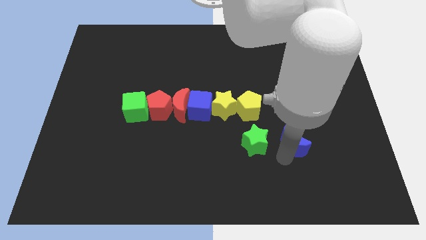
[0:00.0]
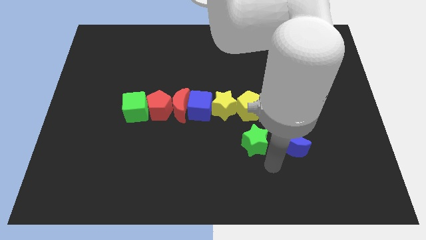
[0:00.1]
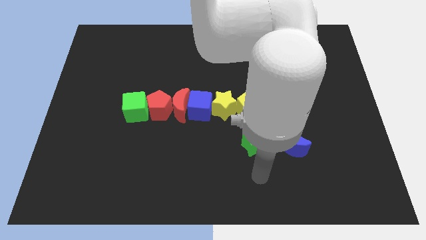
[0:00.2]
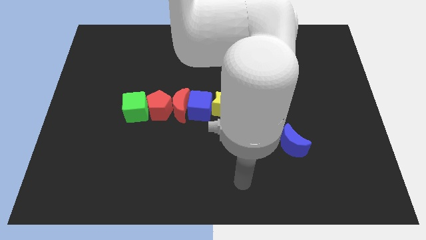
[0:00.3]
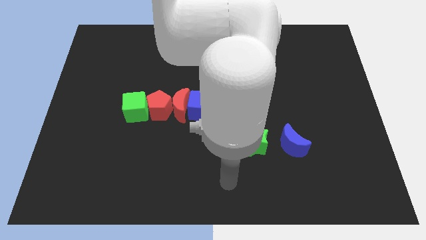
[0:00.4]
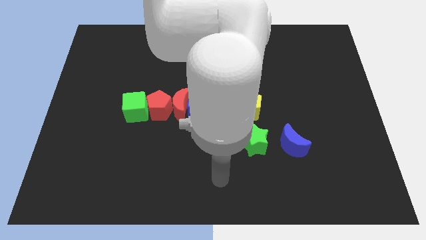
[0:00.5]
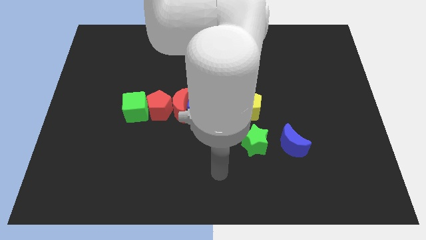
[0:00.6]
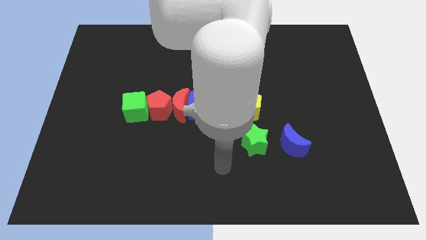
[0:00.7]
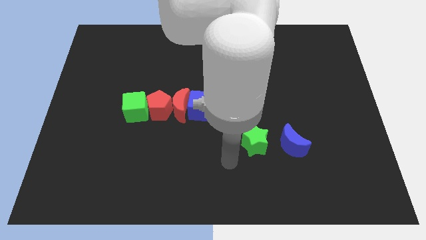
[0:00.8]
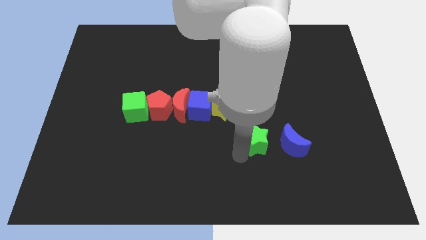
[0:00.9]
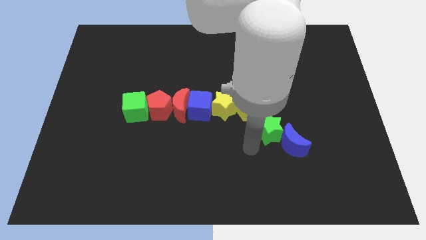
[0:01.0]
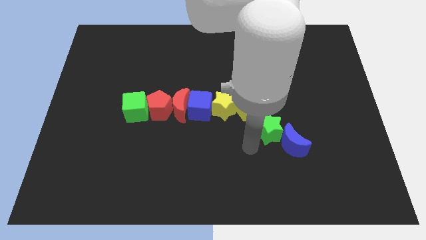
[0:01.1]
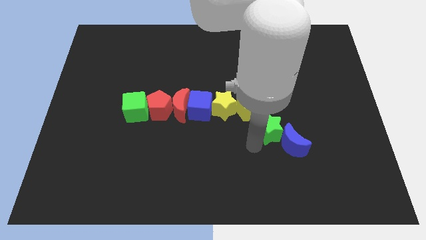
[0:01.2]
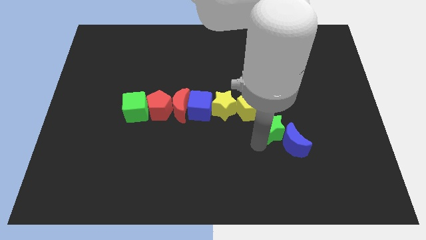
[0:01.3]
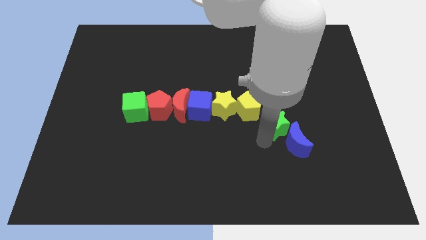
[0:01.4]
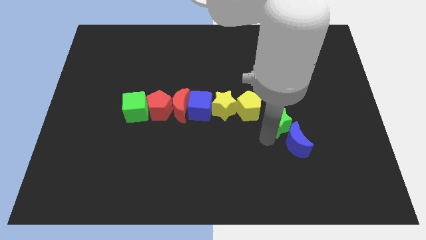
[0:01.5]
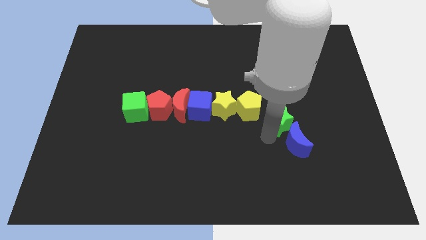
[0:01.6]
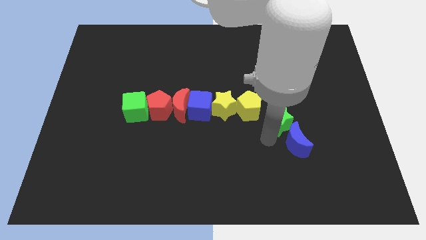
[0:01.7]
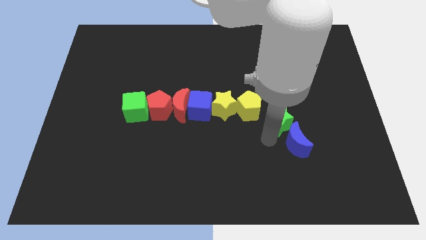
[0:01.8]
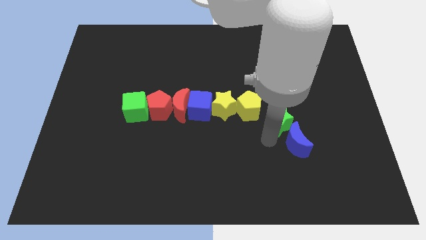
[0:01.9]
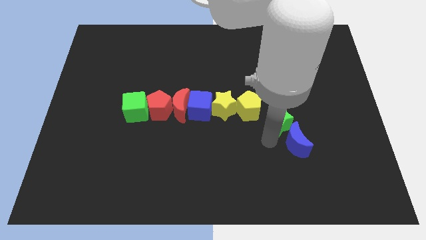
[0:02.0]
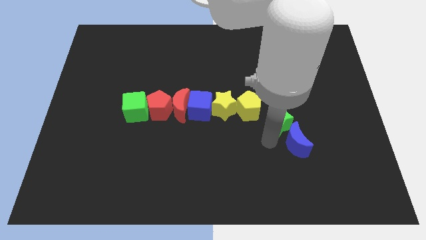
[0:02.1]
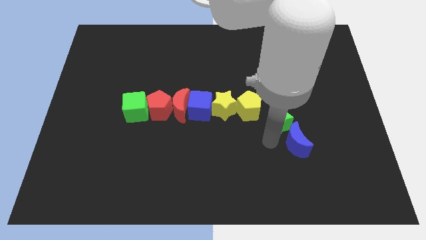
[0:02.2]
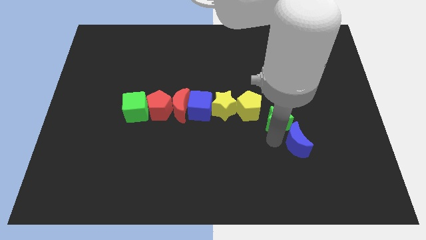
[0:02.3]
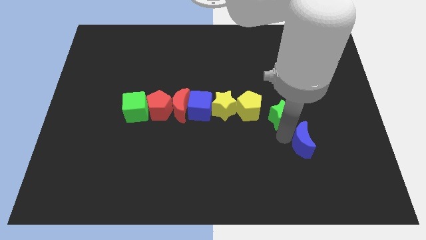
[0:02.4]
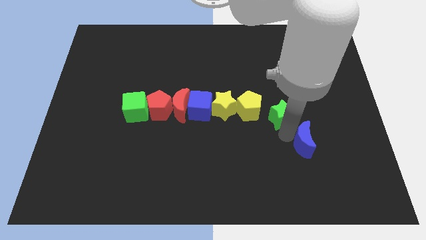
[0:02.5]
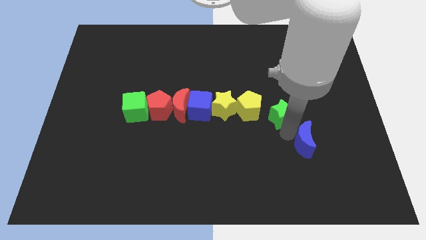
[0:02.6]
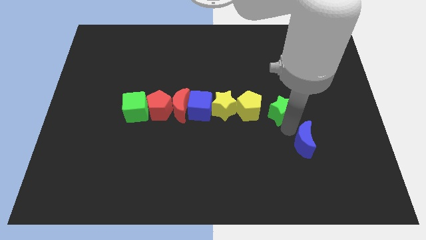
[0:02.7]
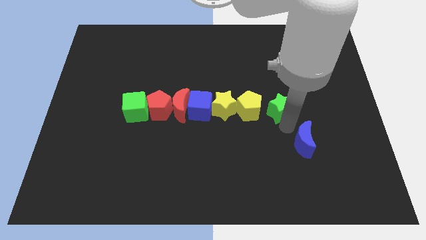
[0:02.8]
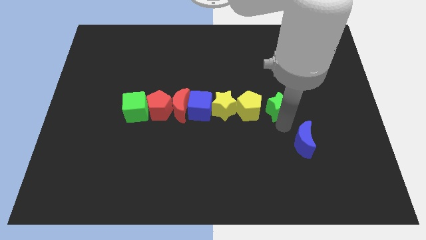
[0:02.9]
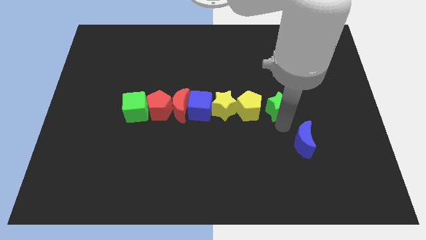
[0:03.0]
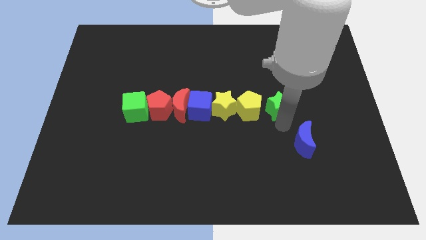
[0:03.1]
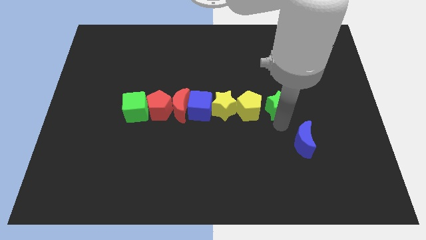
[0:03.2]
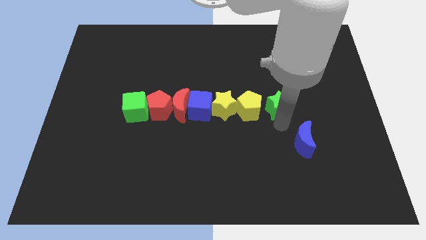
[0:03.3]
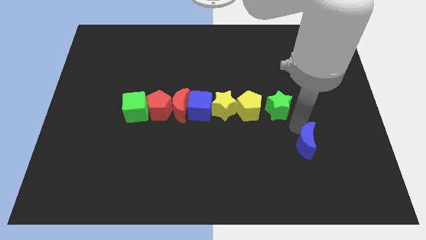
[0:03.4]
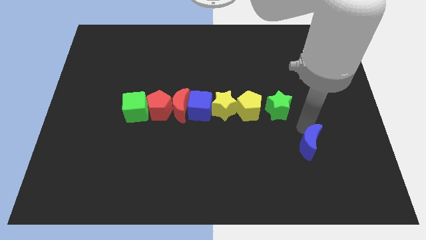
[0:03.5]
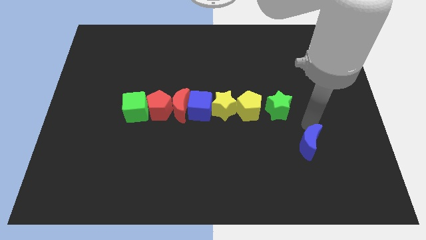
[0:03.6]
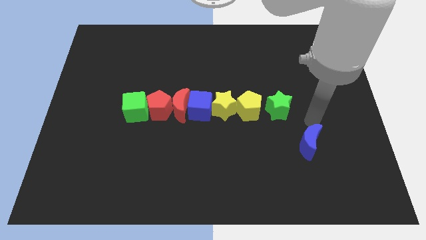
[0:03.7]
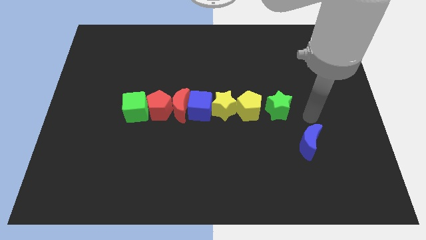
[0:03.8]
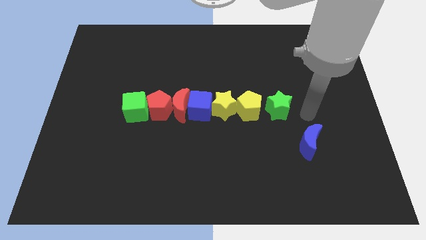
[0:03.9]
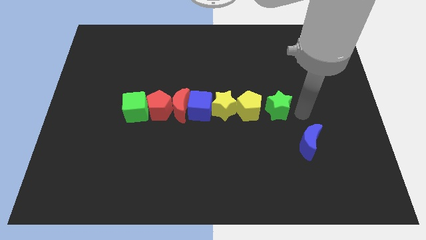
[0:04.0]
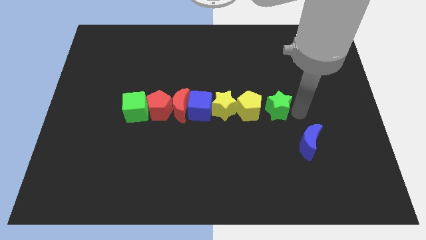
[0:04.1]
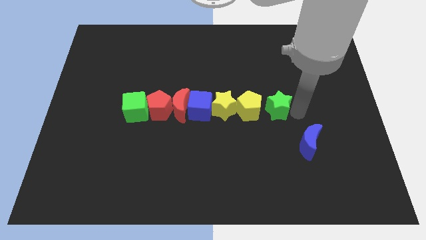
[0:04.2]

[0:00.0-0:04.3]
move the green star to the right side of the horizontal line of the blocks

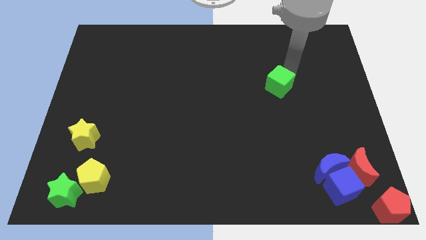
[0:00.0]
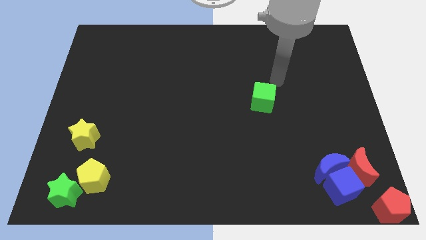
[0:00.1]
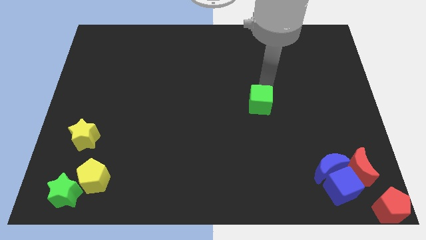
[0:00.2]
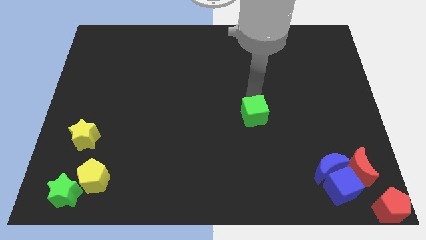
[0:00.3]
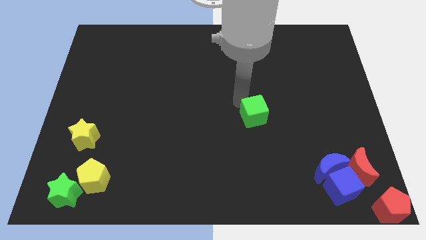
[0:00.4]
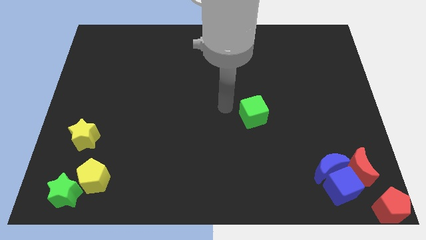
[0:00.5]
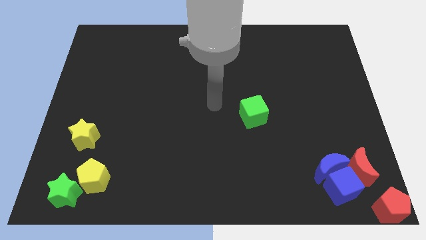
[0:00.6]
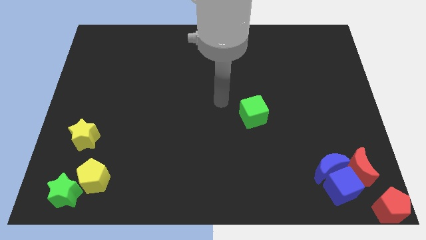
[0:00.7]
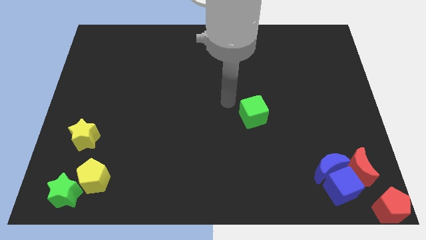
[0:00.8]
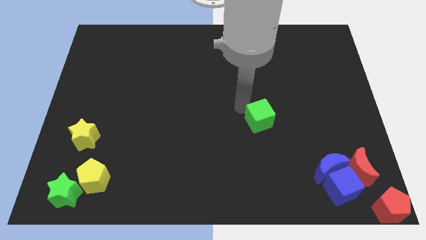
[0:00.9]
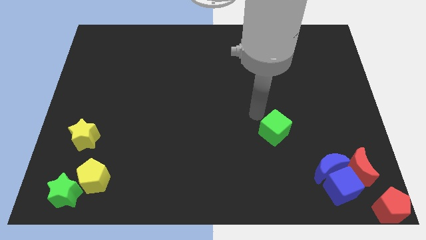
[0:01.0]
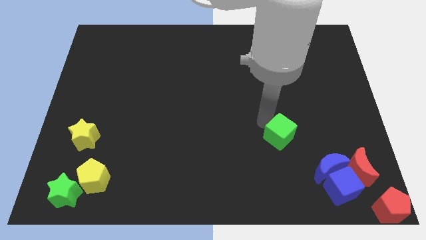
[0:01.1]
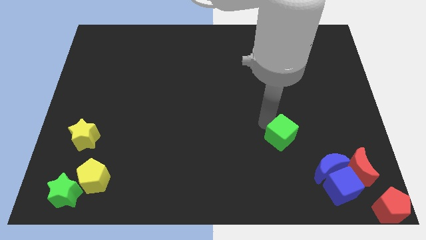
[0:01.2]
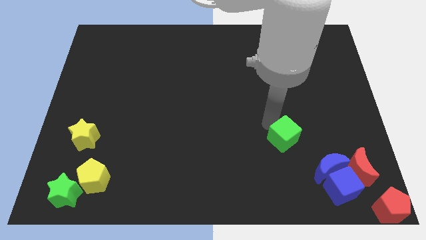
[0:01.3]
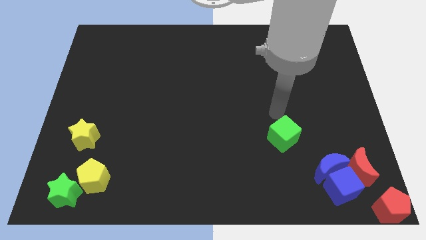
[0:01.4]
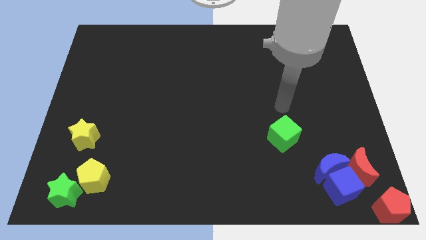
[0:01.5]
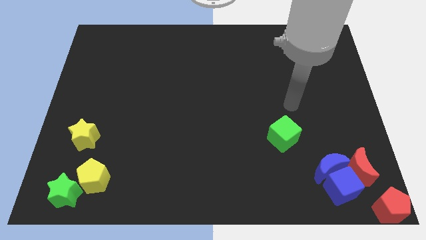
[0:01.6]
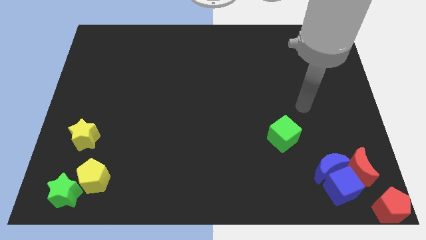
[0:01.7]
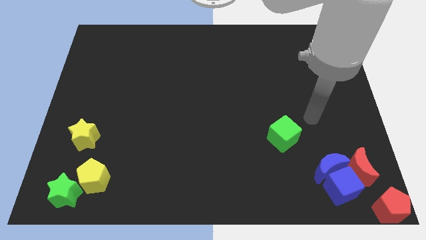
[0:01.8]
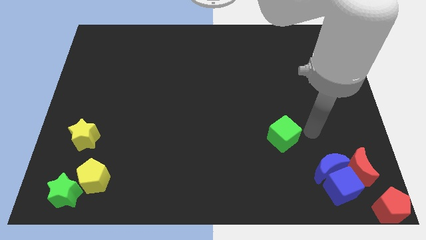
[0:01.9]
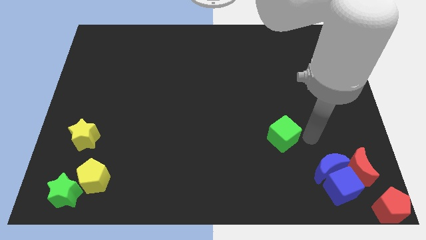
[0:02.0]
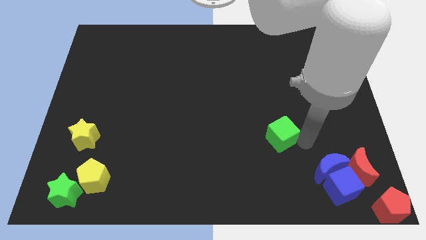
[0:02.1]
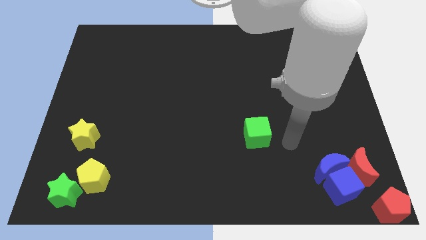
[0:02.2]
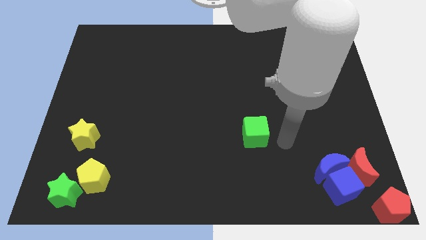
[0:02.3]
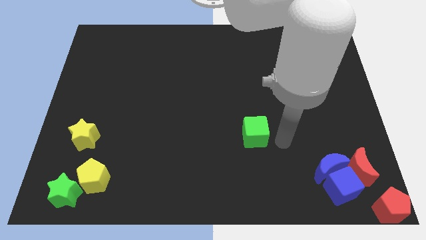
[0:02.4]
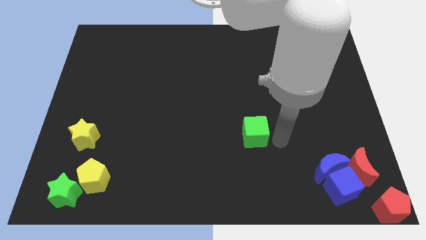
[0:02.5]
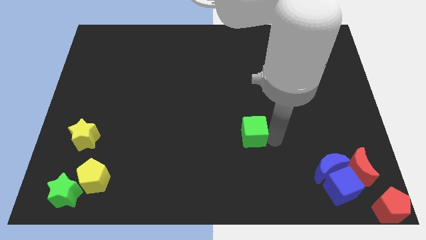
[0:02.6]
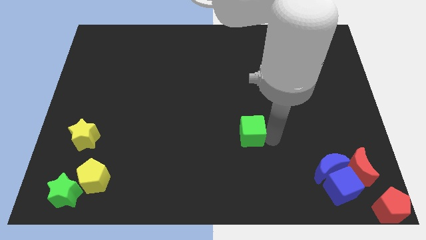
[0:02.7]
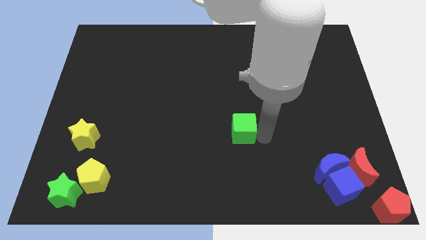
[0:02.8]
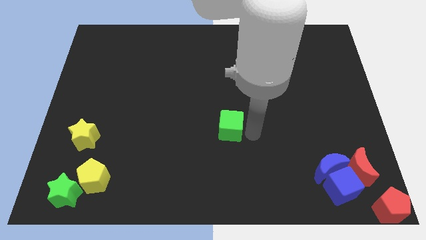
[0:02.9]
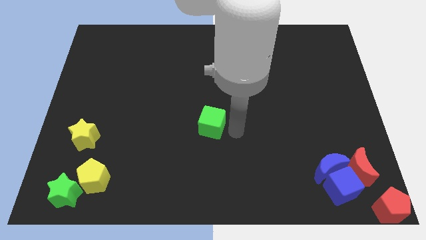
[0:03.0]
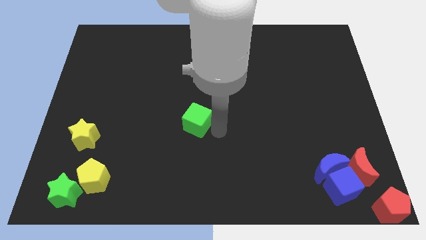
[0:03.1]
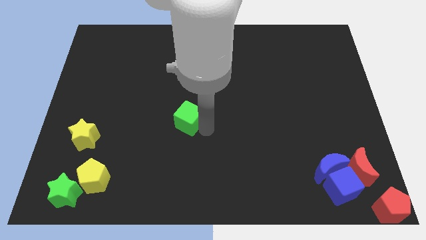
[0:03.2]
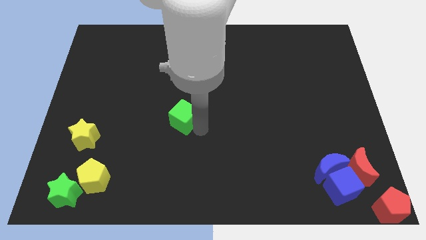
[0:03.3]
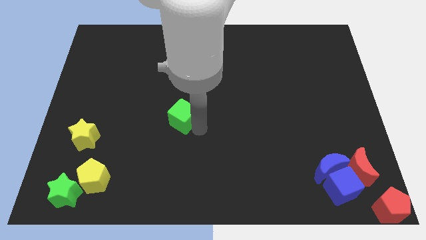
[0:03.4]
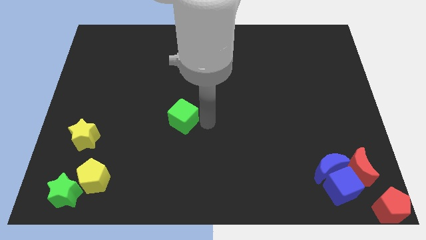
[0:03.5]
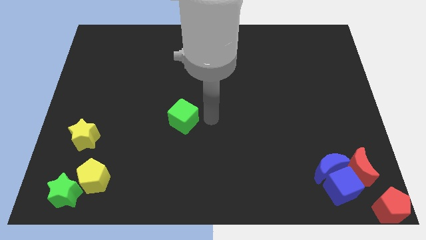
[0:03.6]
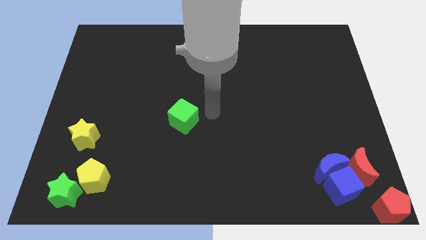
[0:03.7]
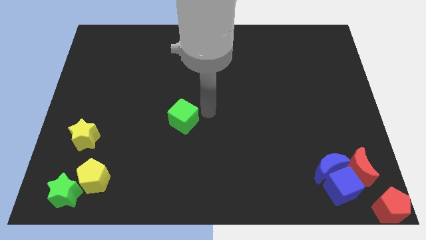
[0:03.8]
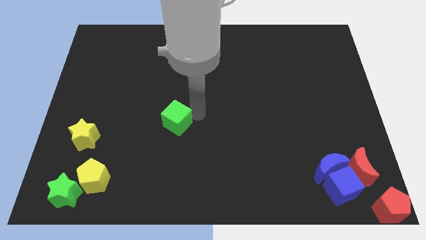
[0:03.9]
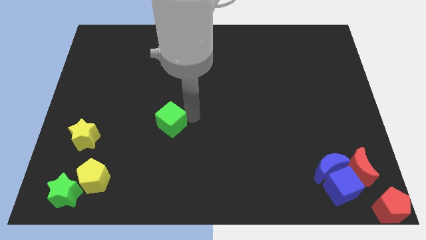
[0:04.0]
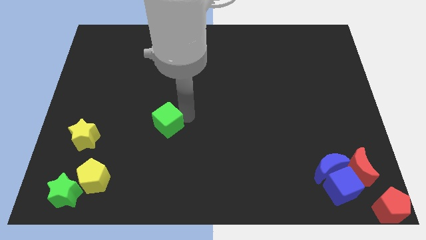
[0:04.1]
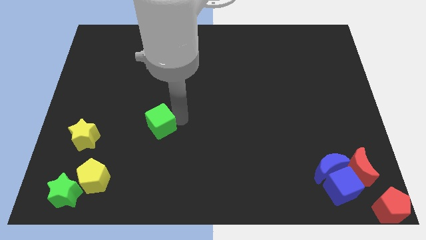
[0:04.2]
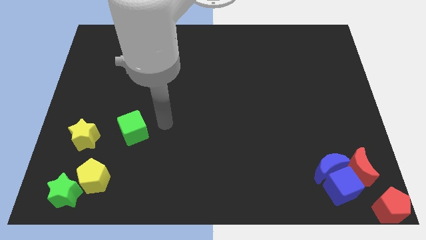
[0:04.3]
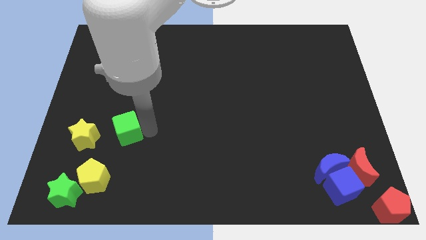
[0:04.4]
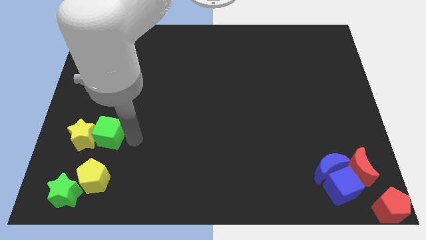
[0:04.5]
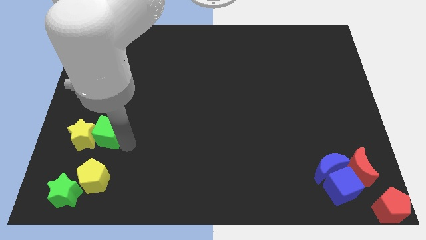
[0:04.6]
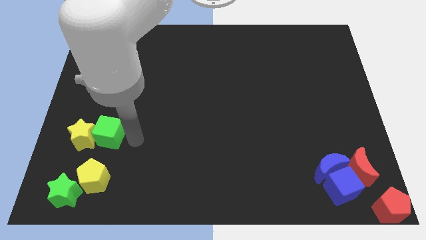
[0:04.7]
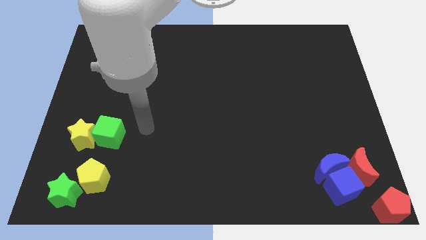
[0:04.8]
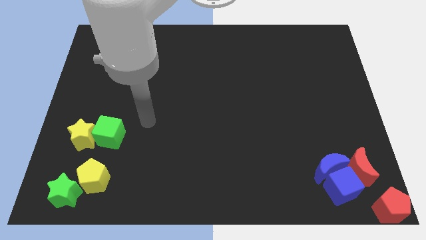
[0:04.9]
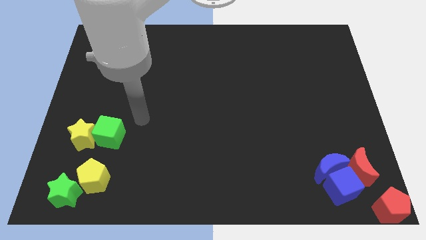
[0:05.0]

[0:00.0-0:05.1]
move green cube towards yellow star
